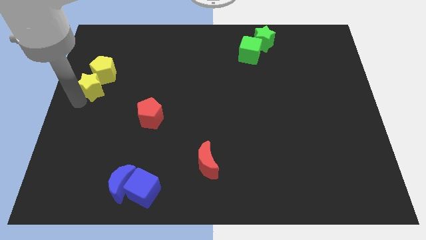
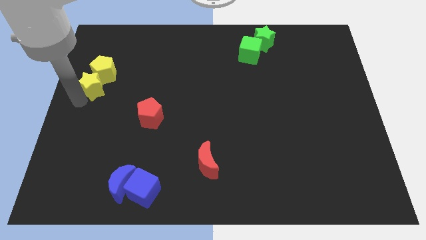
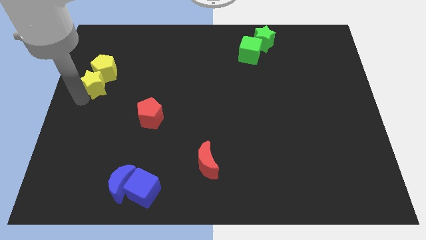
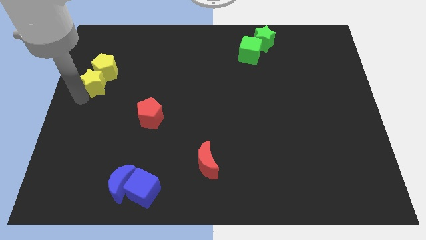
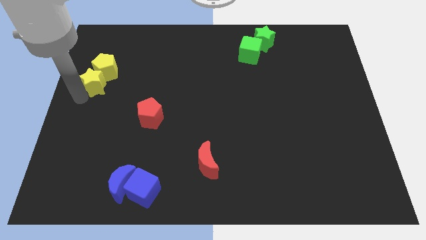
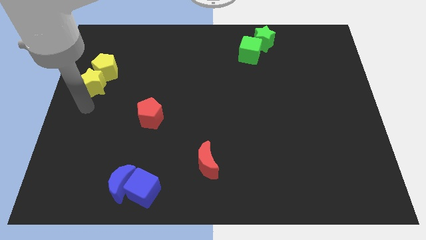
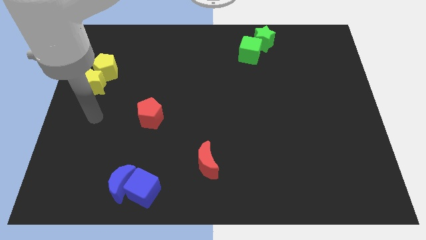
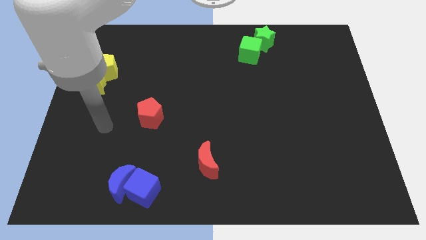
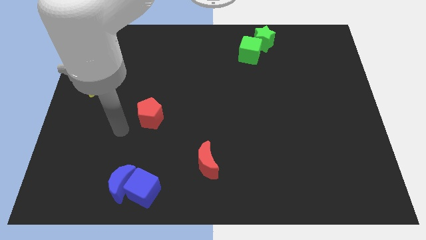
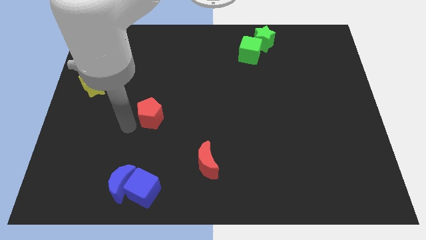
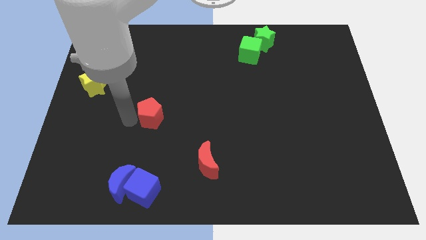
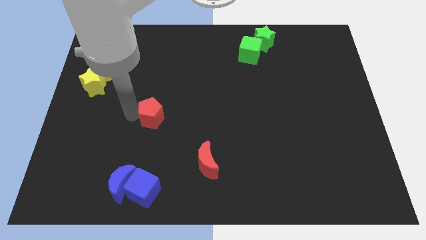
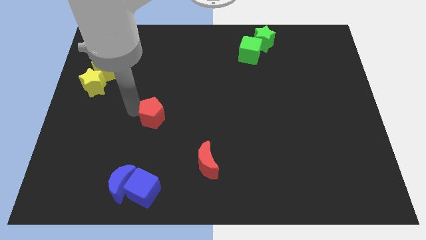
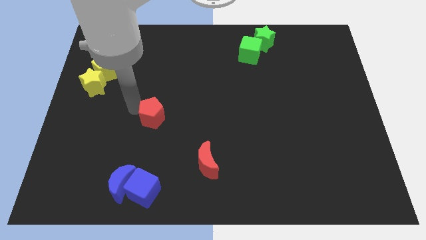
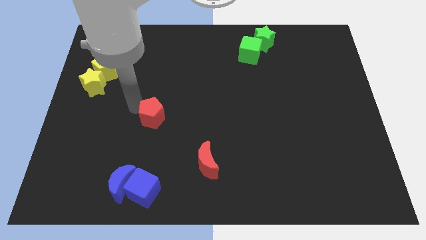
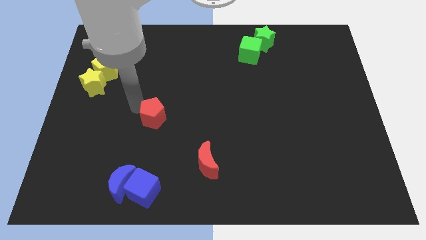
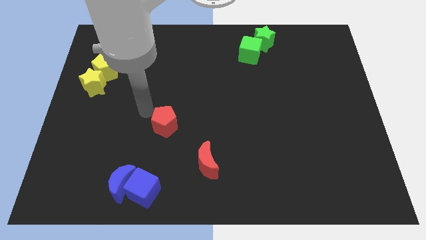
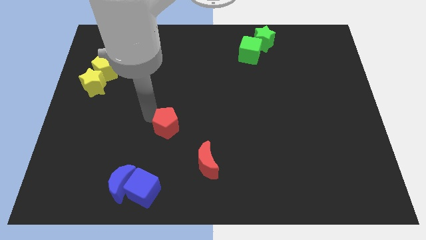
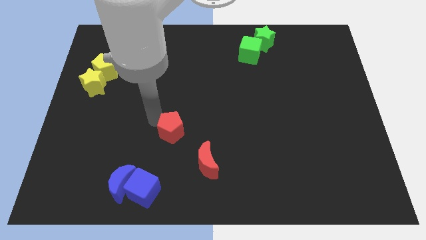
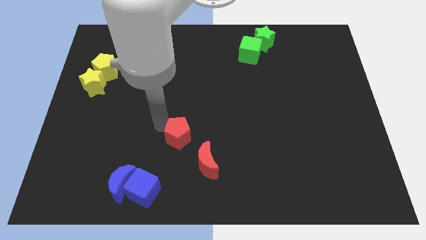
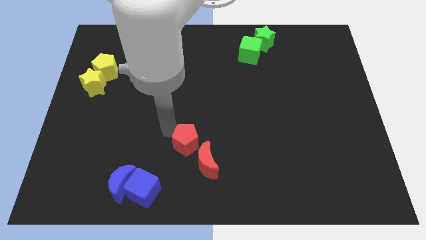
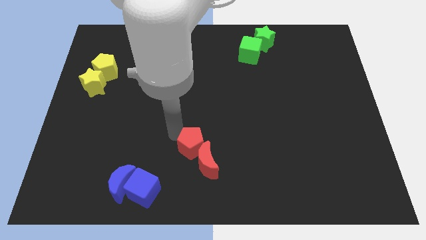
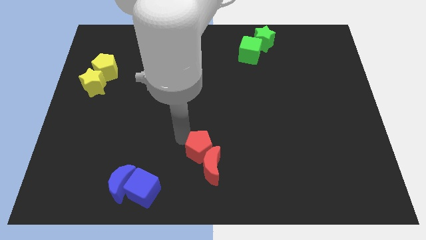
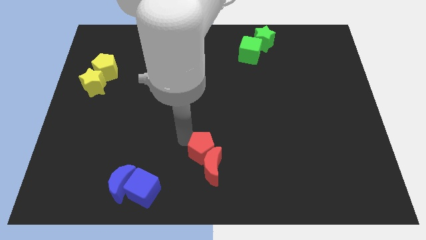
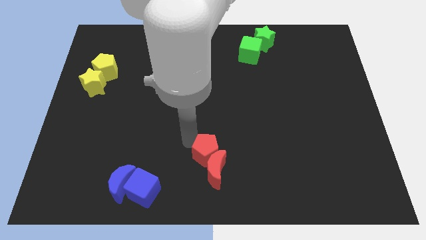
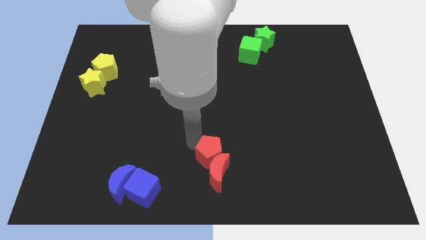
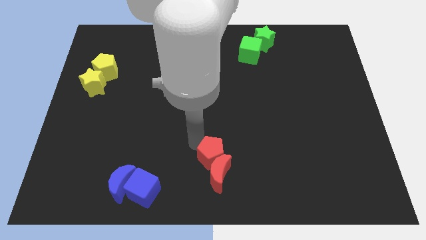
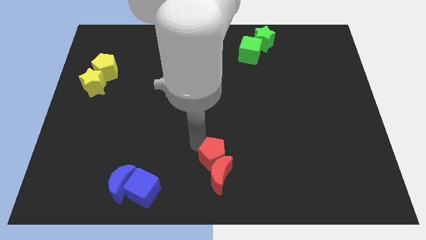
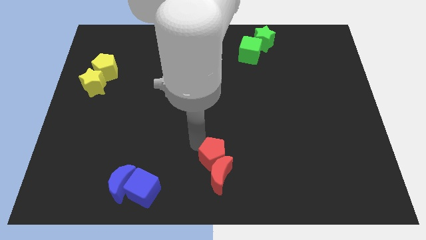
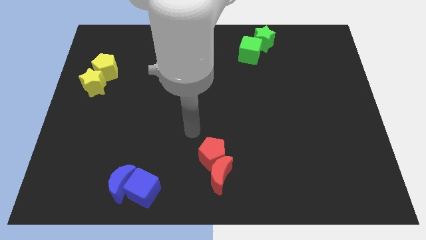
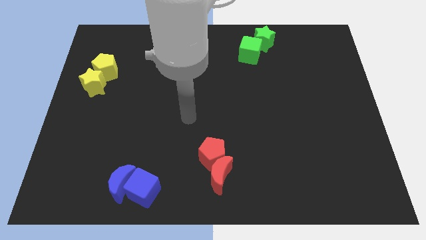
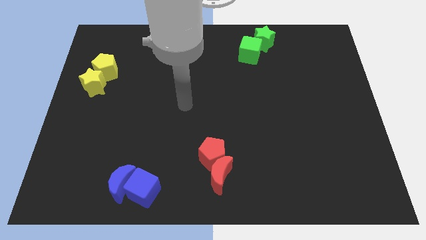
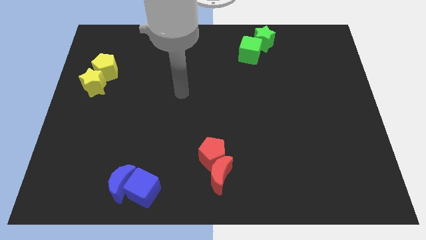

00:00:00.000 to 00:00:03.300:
put the red pentagon and red crescent together

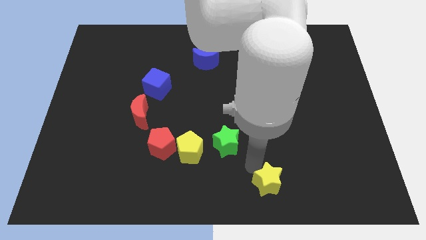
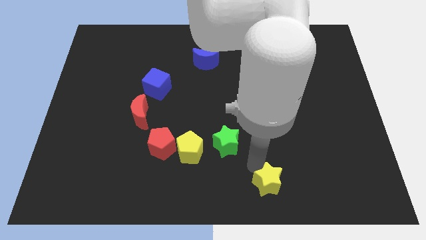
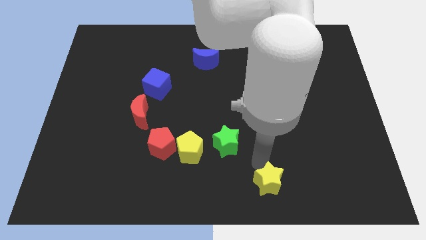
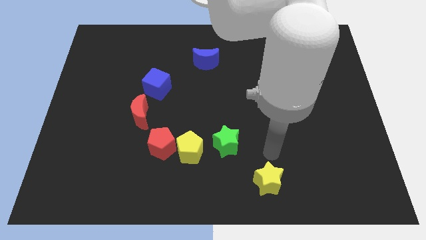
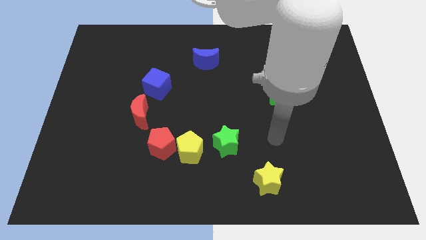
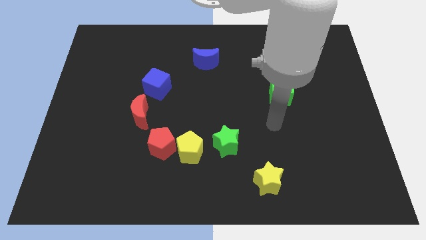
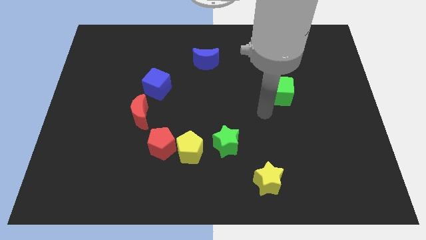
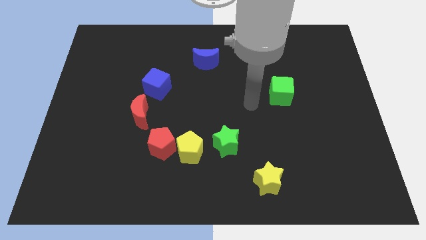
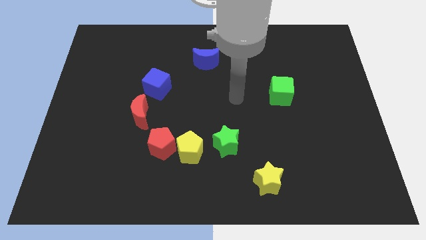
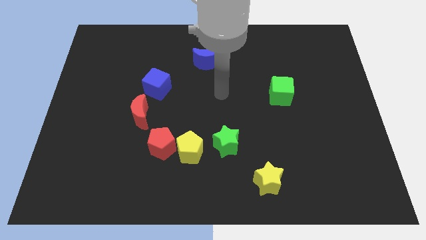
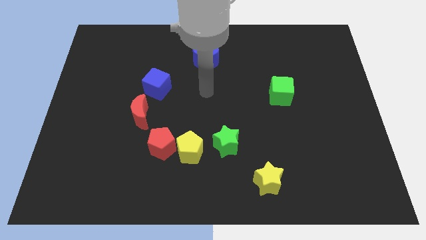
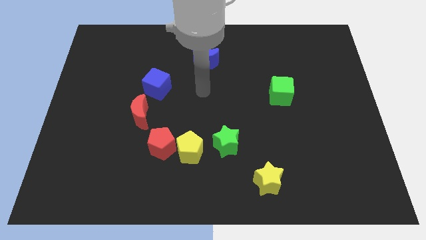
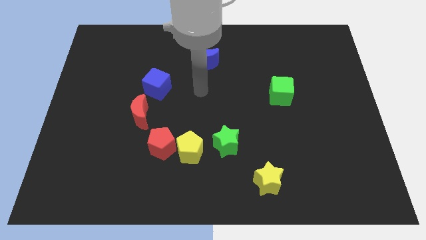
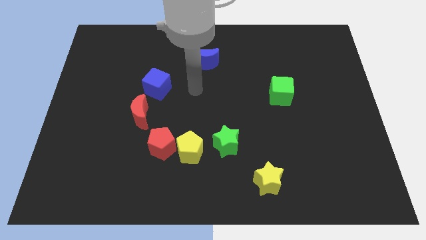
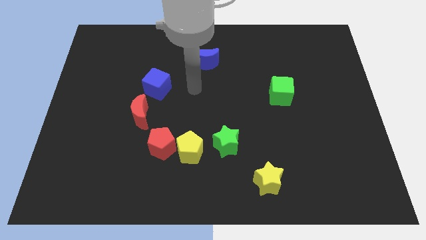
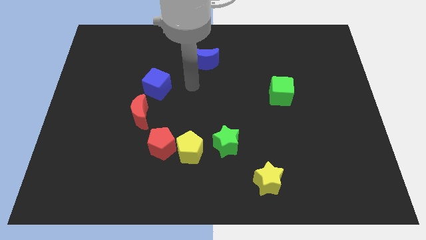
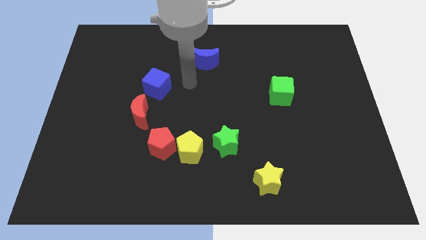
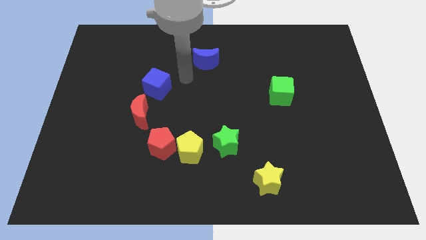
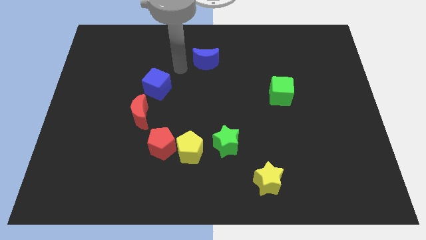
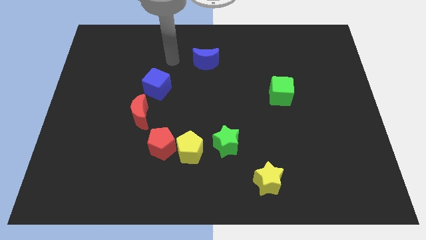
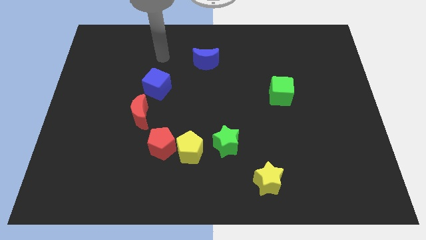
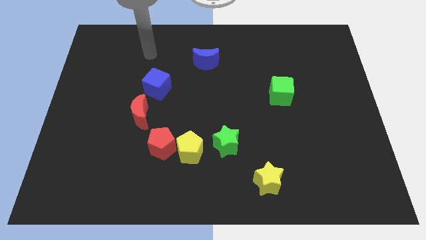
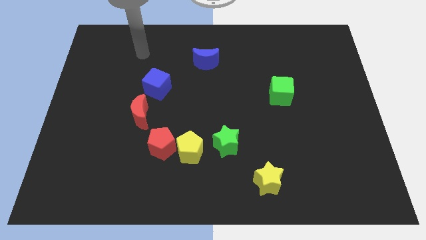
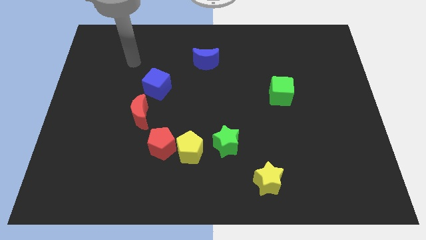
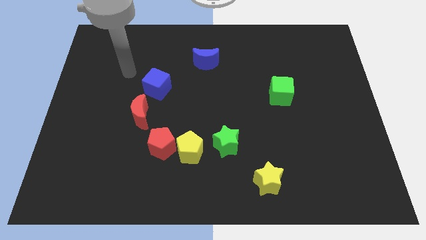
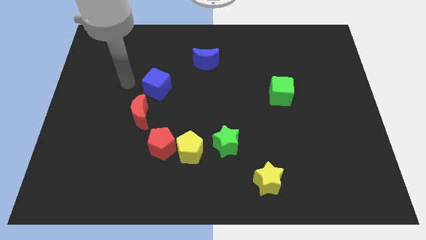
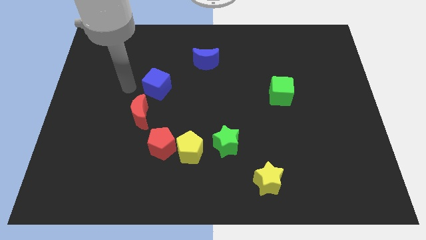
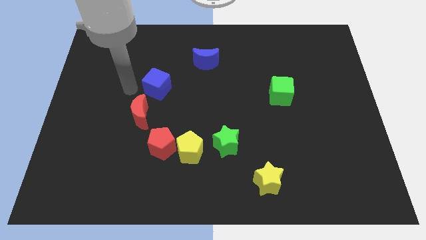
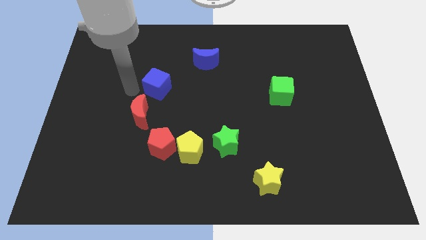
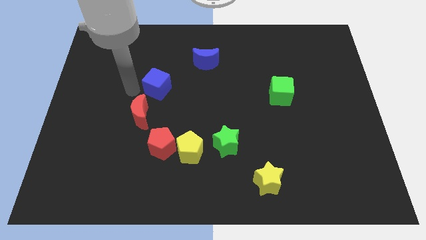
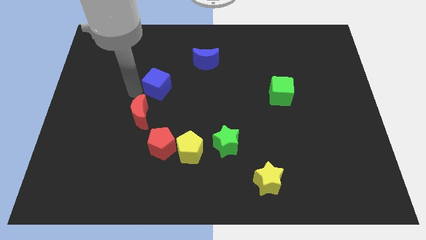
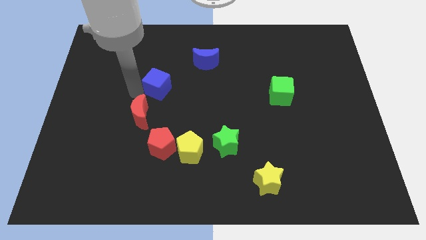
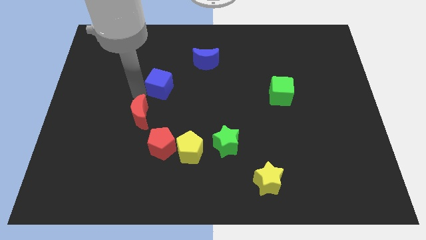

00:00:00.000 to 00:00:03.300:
move your arm from green star to the blue cube

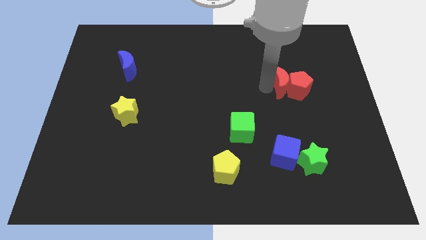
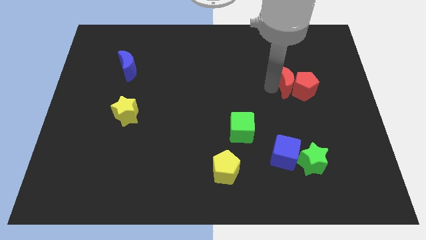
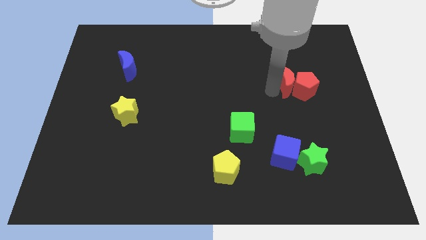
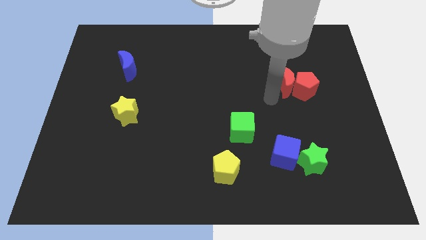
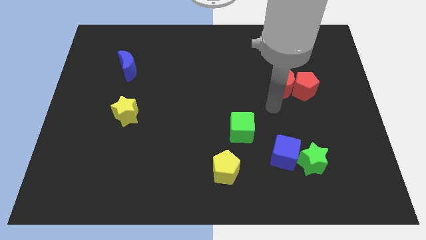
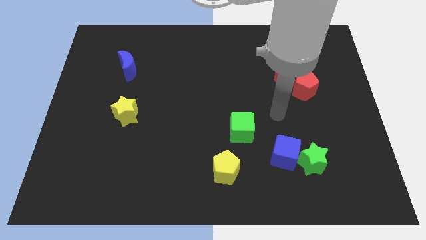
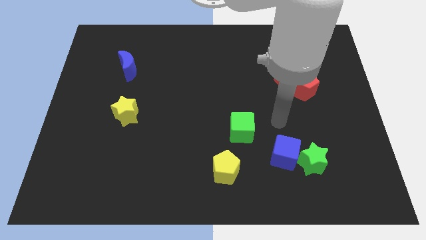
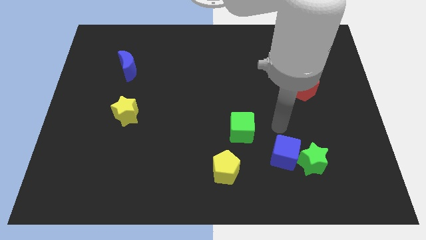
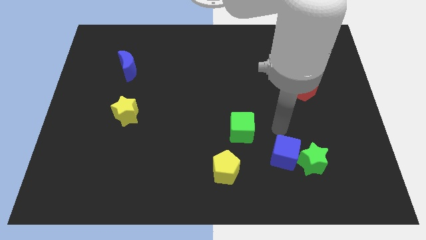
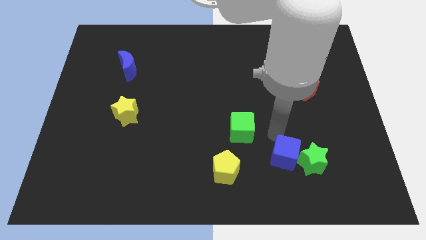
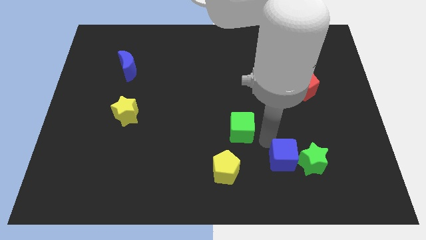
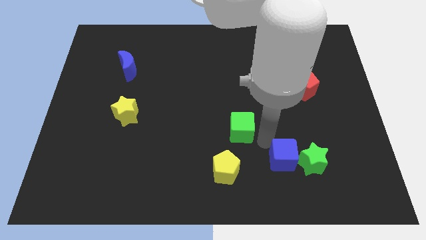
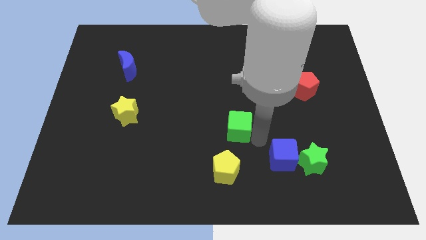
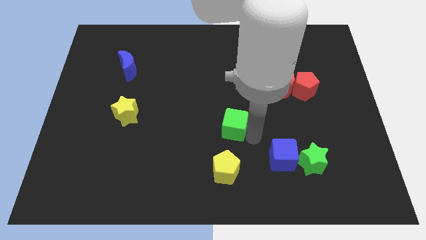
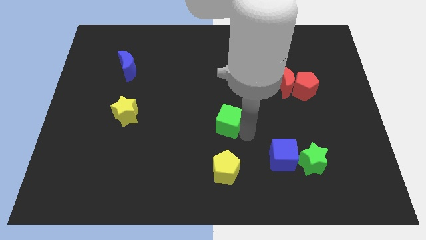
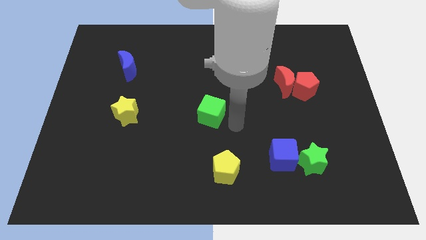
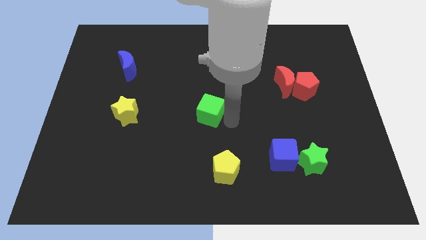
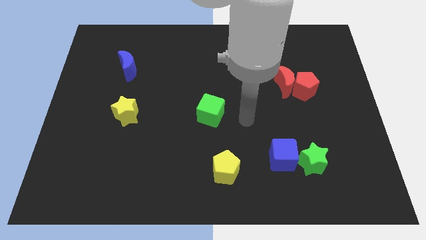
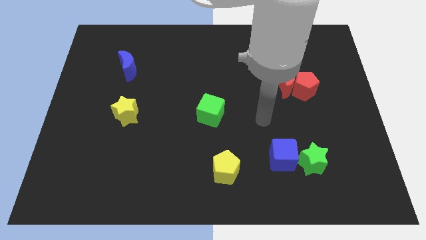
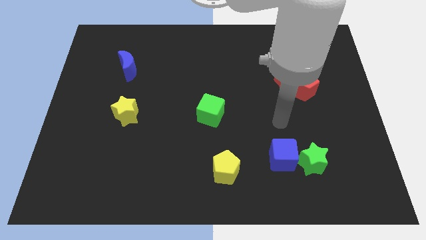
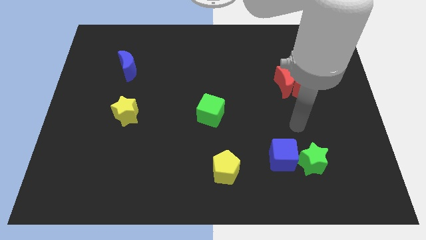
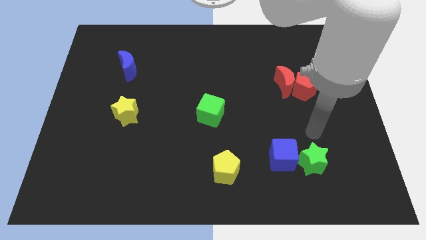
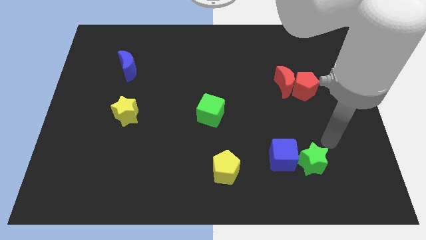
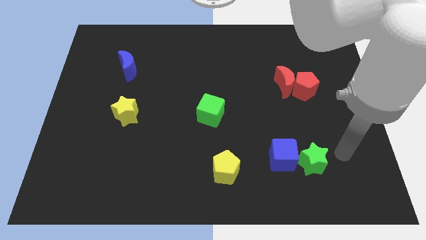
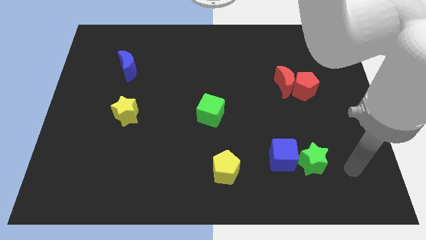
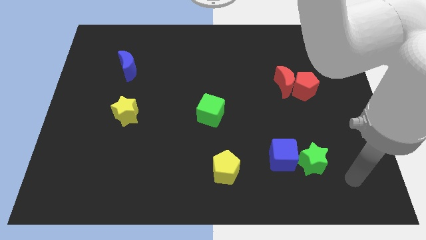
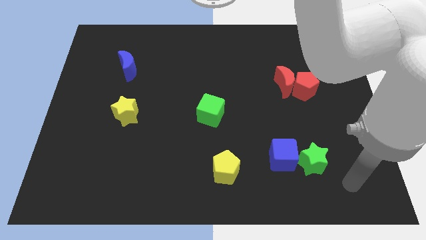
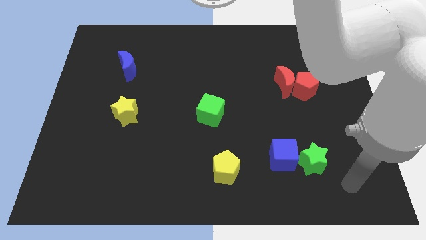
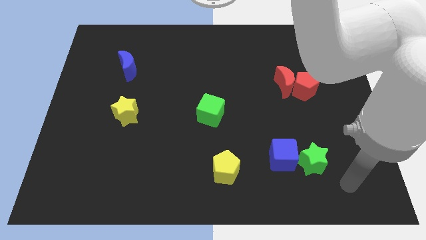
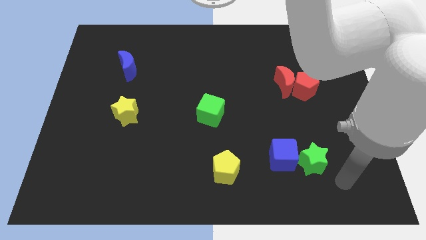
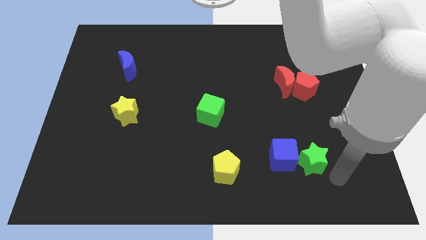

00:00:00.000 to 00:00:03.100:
move the green cube diagonally top left to the yellow pentagon
